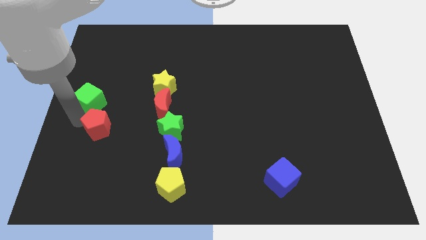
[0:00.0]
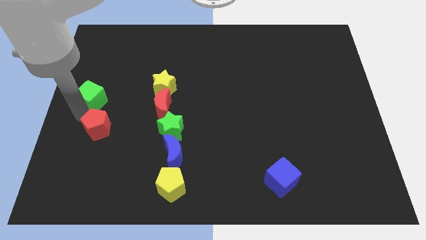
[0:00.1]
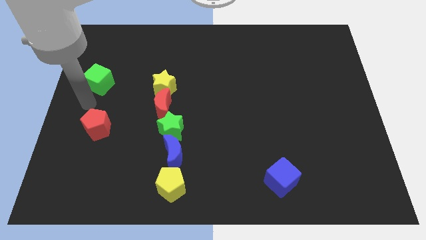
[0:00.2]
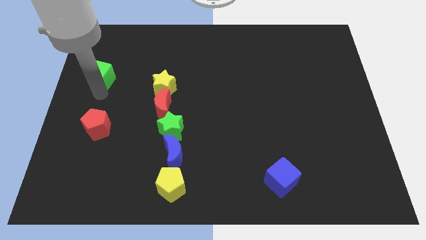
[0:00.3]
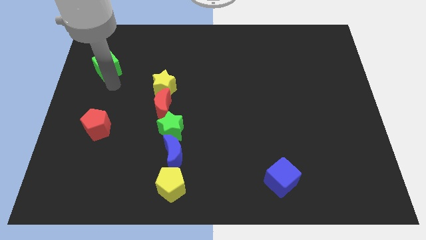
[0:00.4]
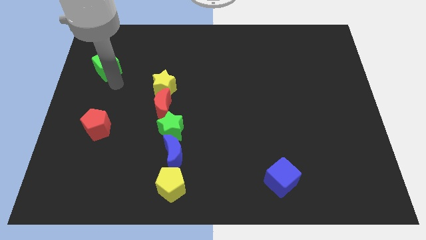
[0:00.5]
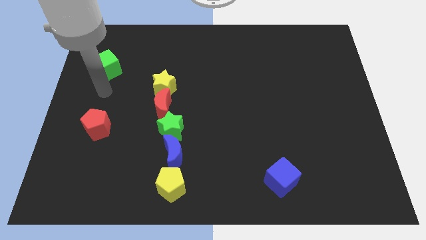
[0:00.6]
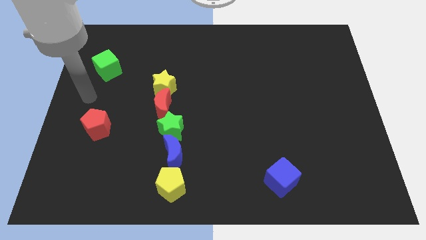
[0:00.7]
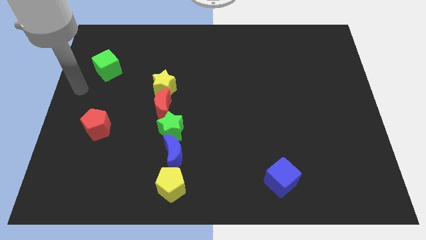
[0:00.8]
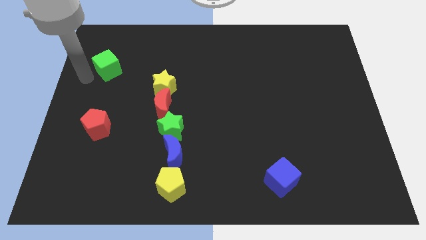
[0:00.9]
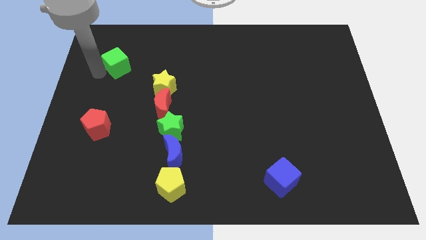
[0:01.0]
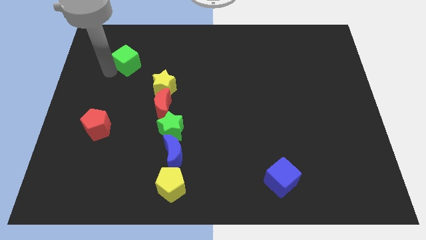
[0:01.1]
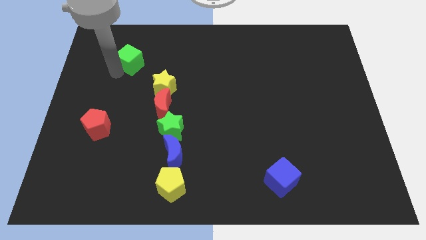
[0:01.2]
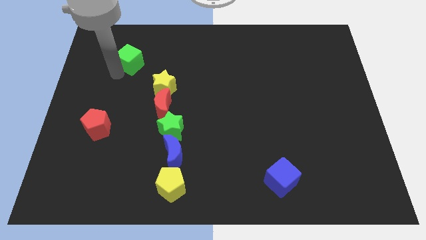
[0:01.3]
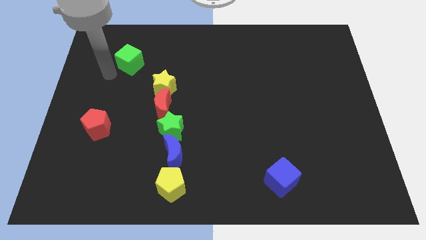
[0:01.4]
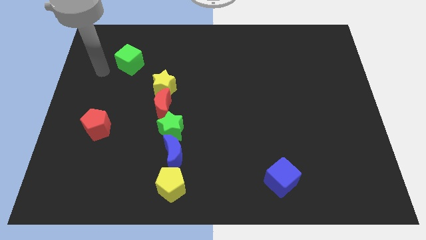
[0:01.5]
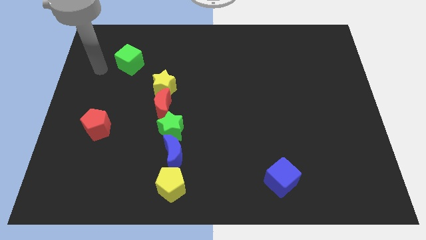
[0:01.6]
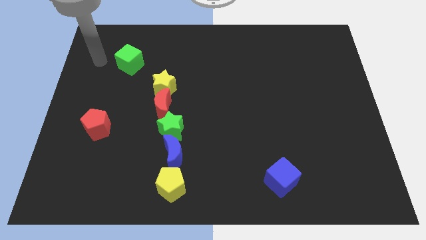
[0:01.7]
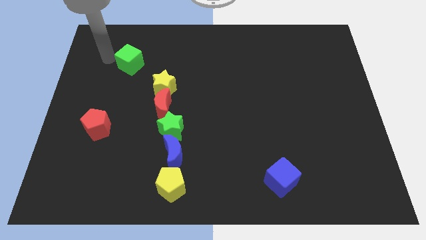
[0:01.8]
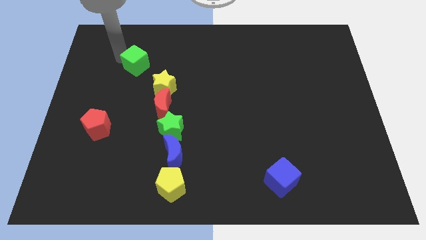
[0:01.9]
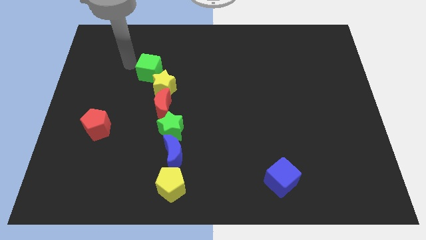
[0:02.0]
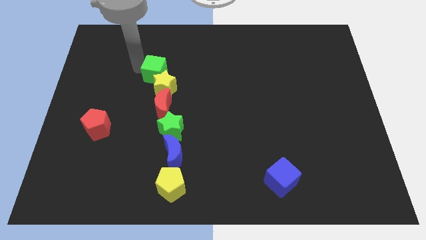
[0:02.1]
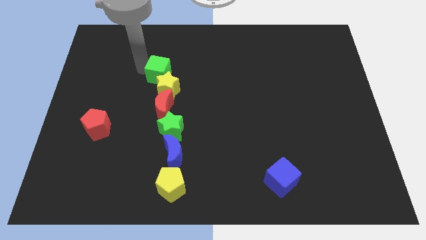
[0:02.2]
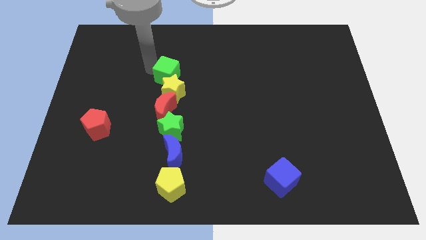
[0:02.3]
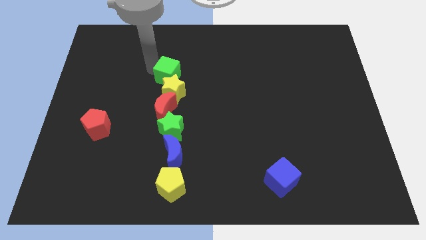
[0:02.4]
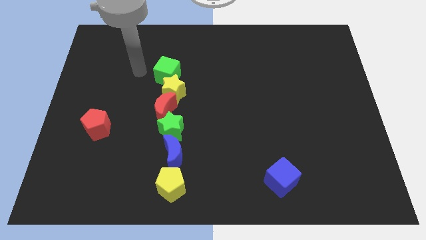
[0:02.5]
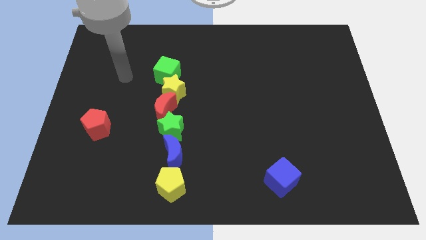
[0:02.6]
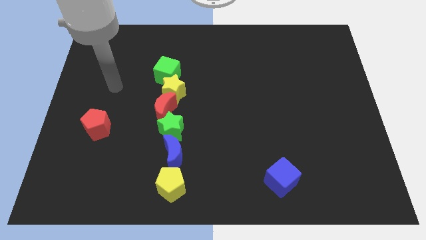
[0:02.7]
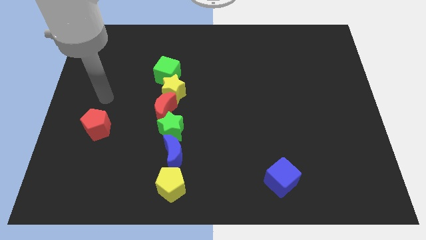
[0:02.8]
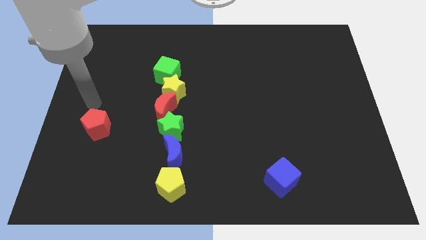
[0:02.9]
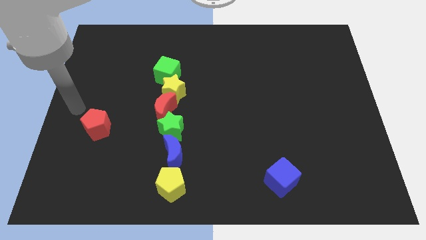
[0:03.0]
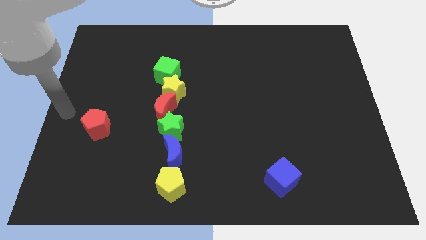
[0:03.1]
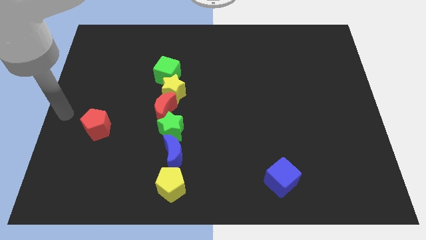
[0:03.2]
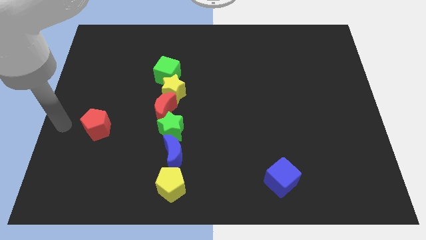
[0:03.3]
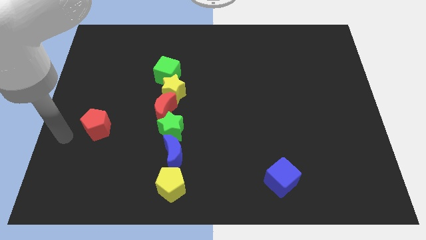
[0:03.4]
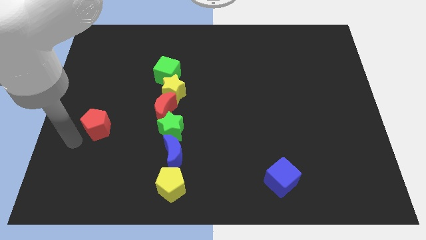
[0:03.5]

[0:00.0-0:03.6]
push the green cube into the yellow star

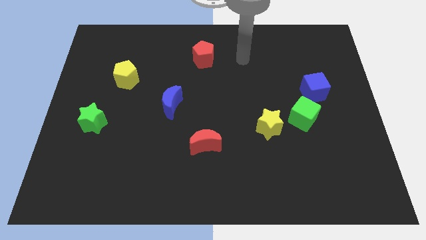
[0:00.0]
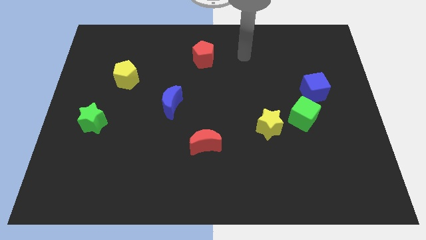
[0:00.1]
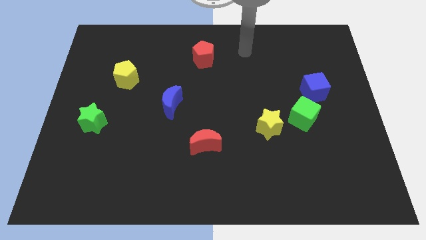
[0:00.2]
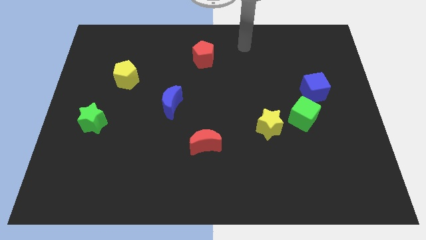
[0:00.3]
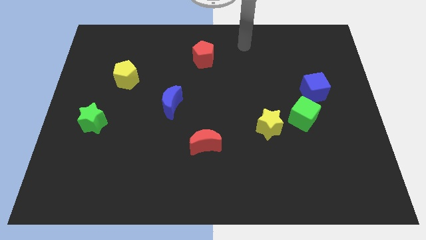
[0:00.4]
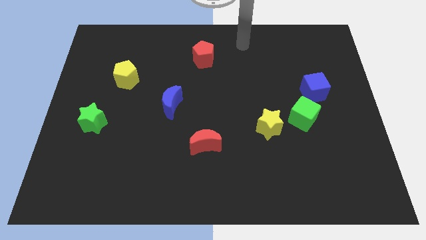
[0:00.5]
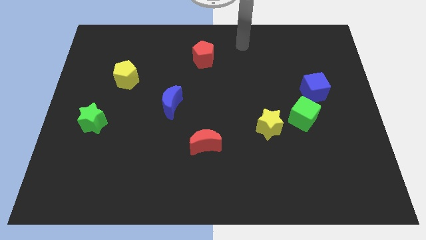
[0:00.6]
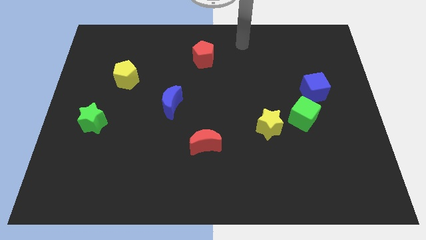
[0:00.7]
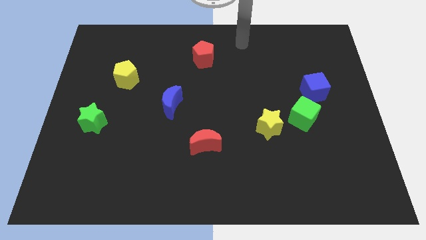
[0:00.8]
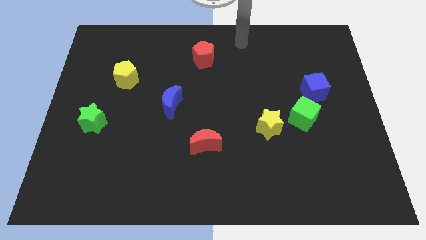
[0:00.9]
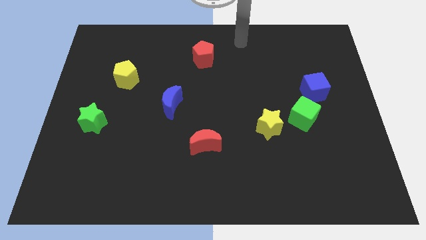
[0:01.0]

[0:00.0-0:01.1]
move your hand towards top center

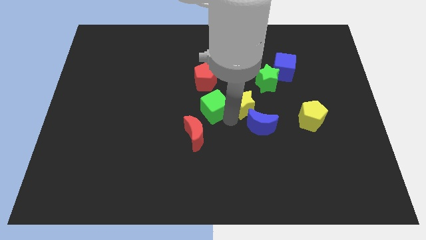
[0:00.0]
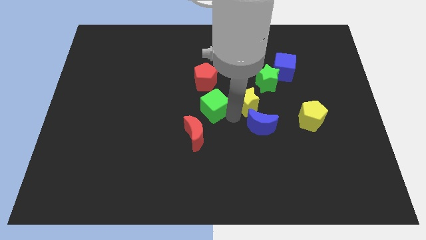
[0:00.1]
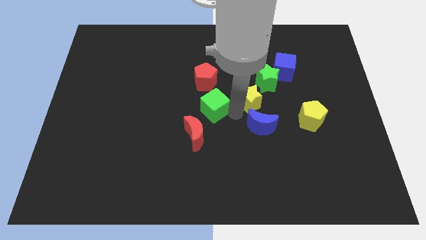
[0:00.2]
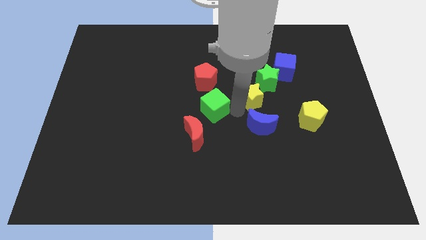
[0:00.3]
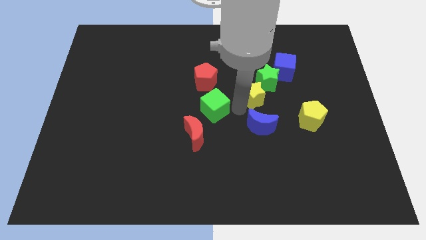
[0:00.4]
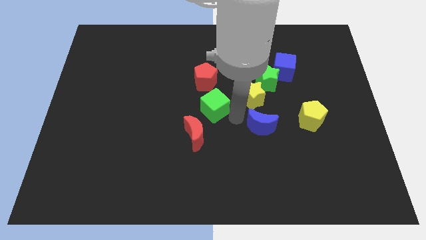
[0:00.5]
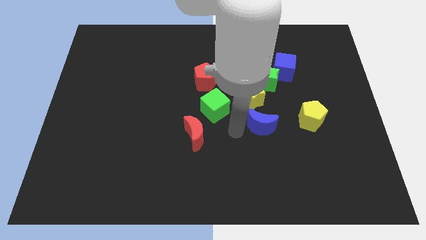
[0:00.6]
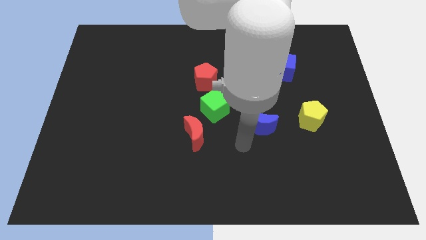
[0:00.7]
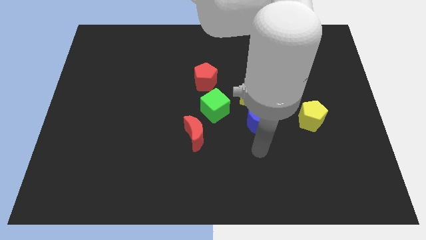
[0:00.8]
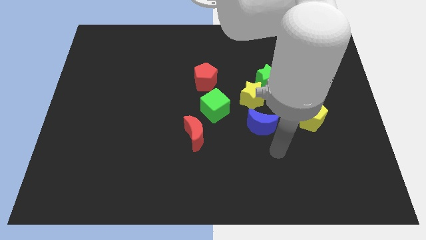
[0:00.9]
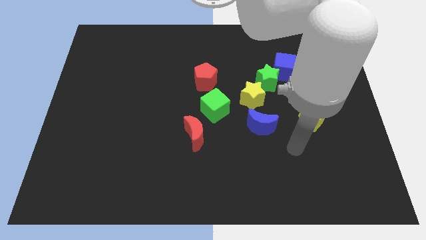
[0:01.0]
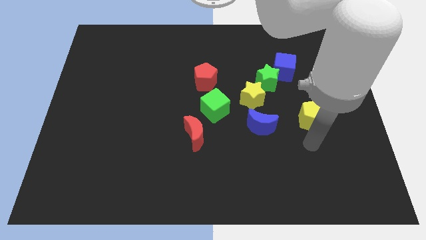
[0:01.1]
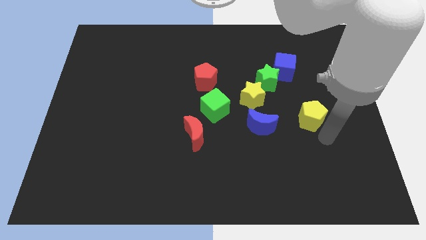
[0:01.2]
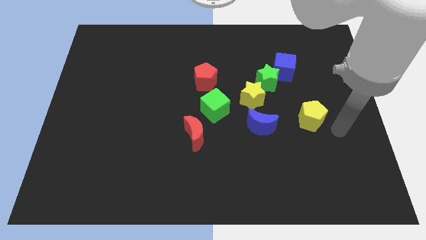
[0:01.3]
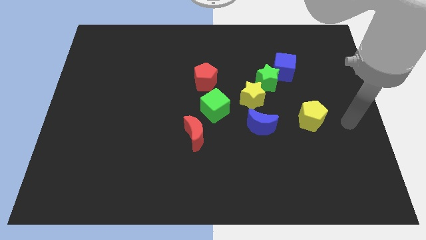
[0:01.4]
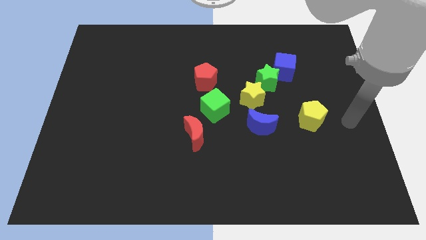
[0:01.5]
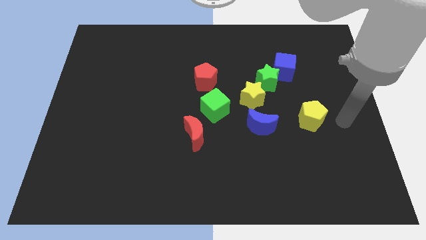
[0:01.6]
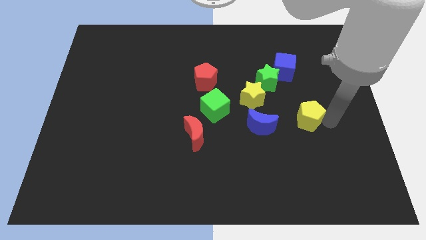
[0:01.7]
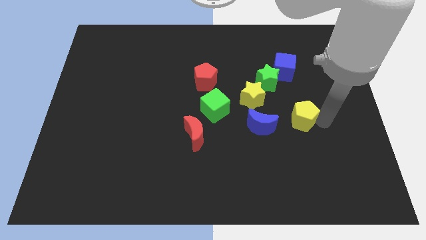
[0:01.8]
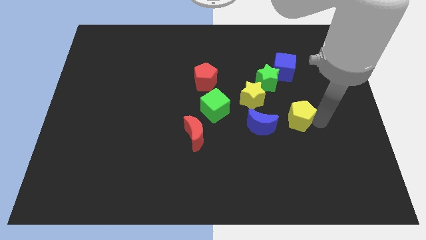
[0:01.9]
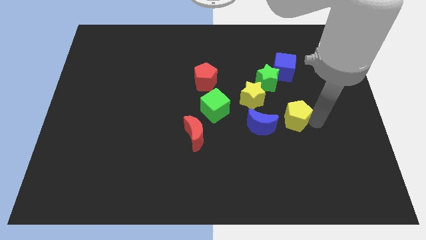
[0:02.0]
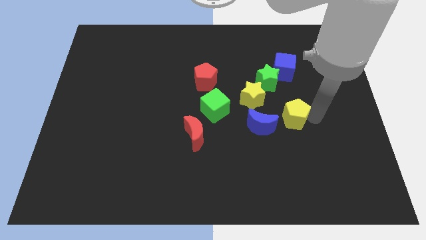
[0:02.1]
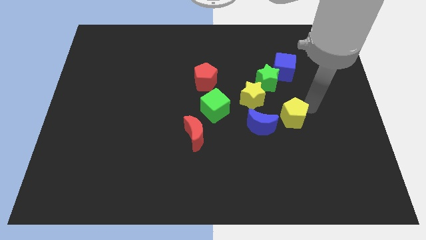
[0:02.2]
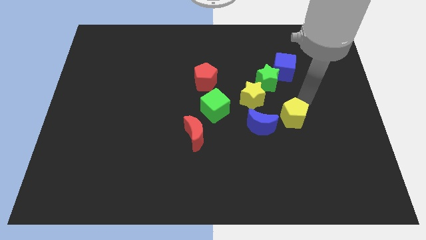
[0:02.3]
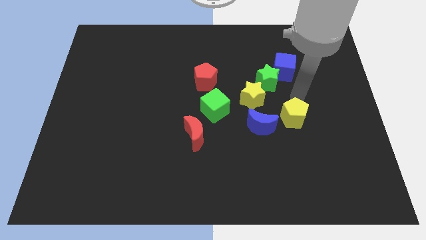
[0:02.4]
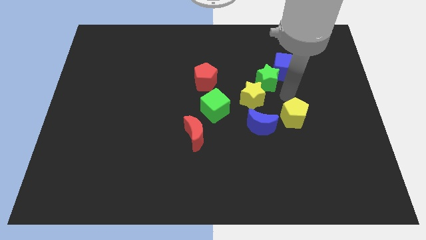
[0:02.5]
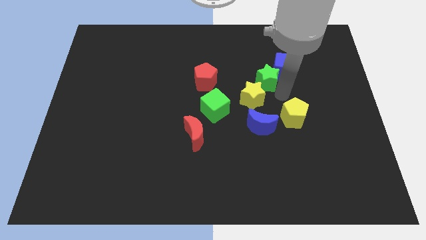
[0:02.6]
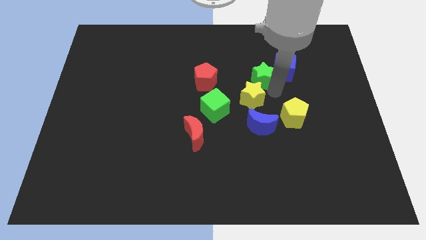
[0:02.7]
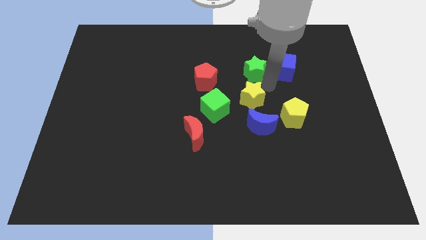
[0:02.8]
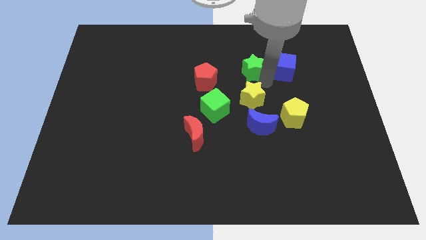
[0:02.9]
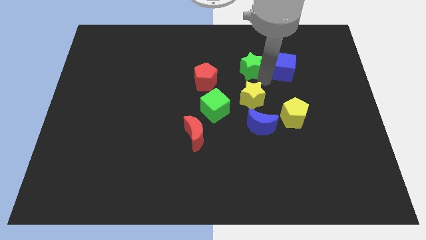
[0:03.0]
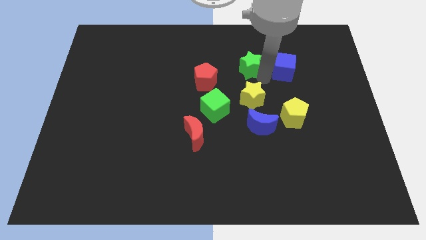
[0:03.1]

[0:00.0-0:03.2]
move the yellow pentagon close to the yellow star

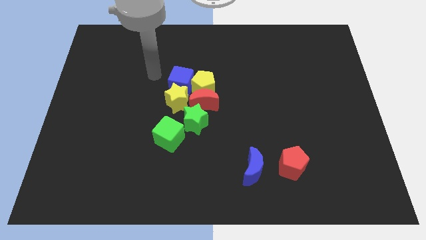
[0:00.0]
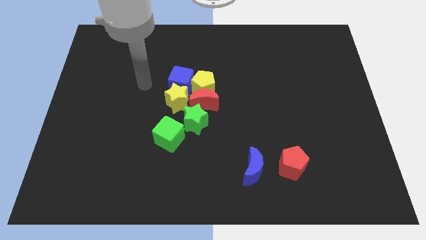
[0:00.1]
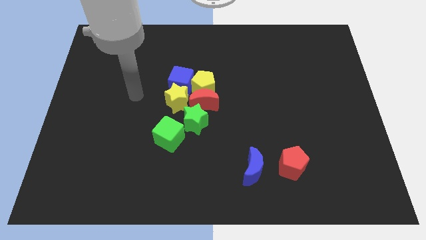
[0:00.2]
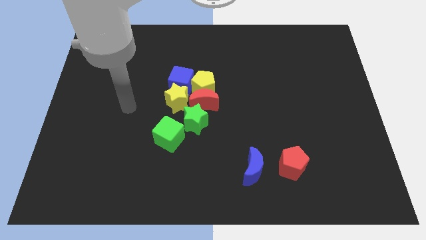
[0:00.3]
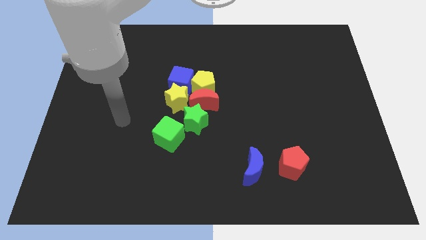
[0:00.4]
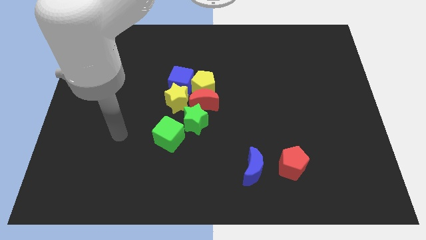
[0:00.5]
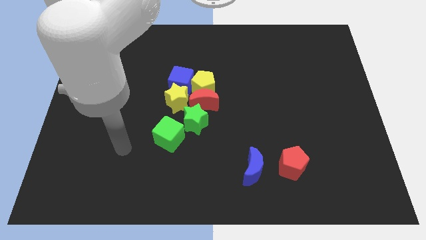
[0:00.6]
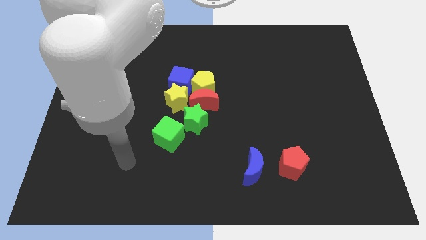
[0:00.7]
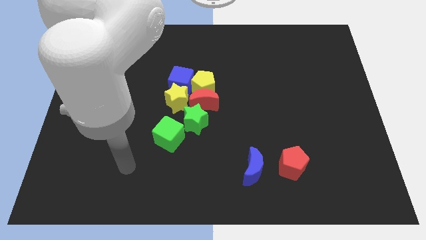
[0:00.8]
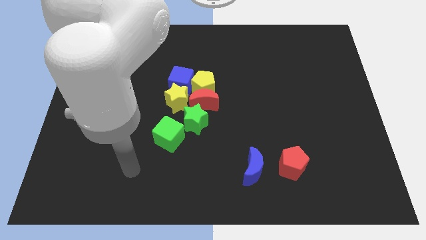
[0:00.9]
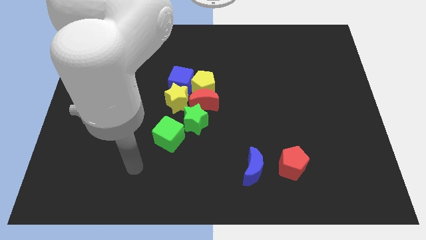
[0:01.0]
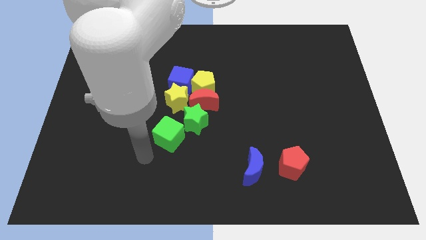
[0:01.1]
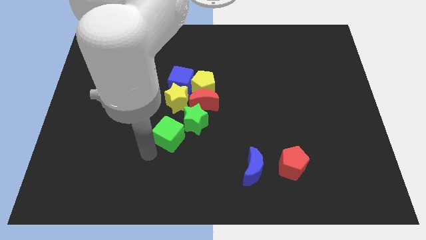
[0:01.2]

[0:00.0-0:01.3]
move your arm away from the blue cube
